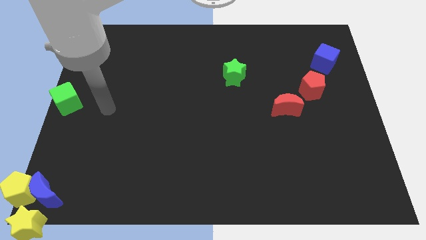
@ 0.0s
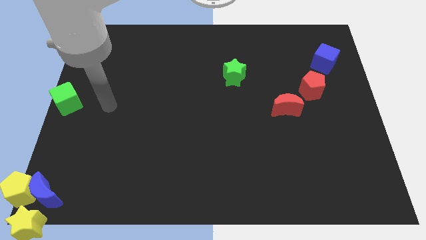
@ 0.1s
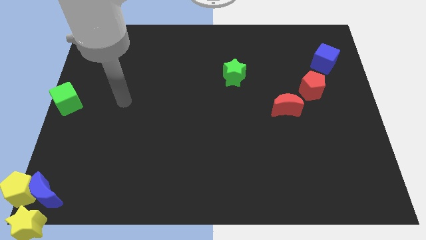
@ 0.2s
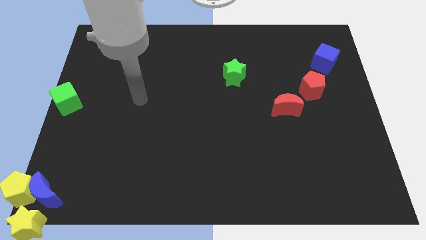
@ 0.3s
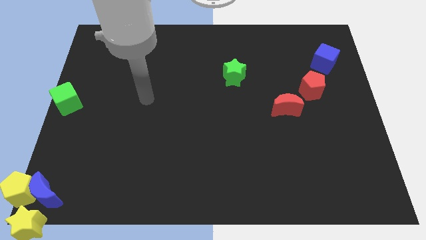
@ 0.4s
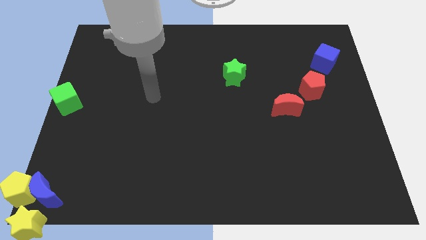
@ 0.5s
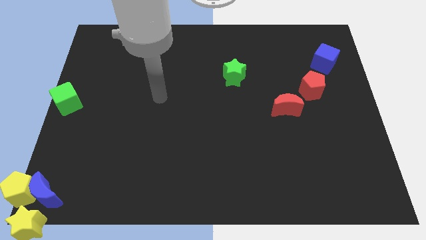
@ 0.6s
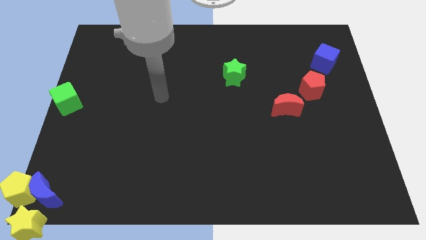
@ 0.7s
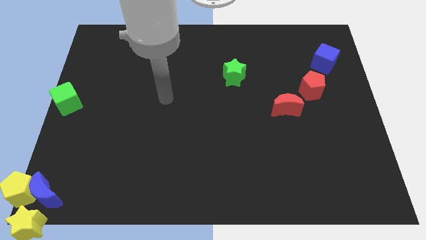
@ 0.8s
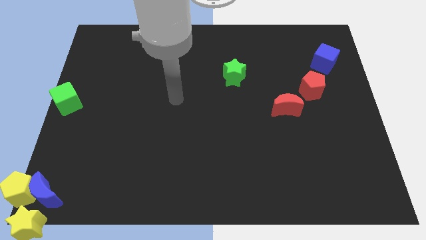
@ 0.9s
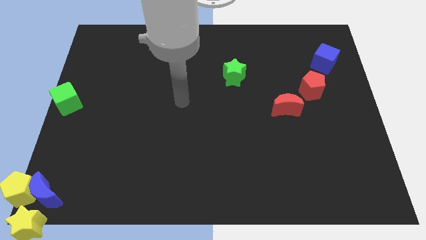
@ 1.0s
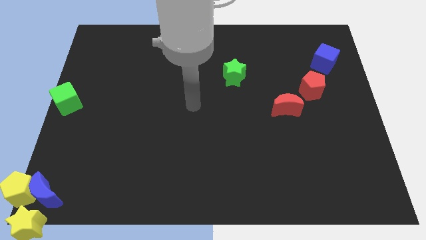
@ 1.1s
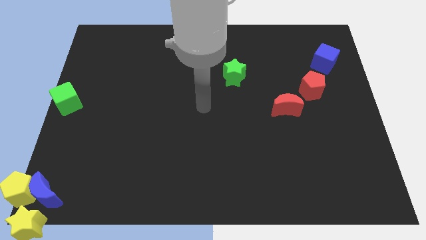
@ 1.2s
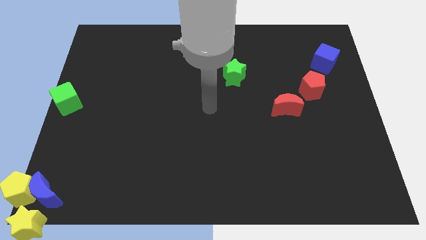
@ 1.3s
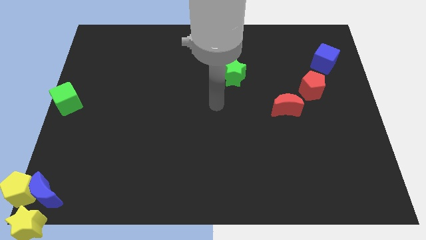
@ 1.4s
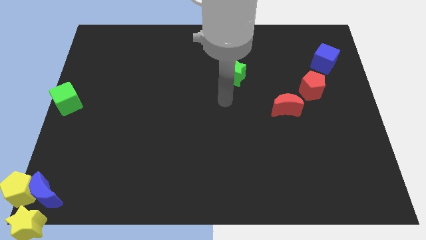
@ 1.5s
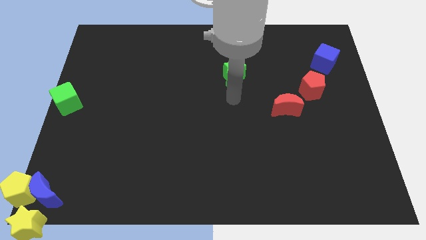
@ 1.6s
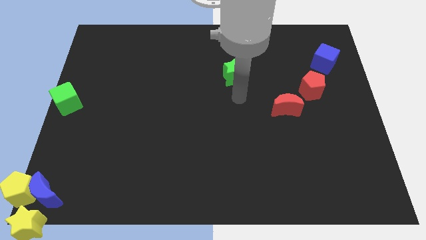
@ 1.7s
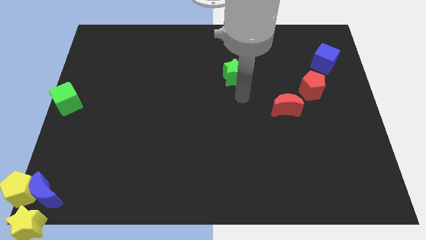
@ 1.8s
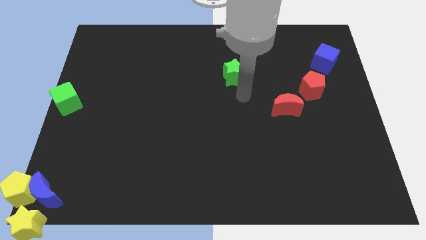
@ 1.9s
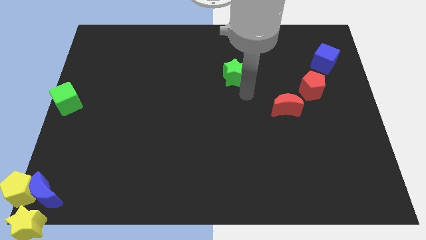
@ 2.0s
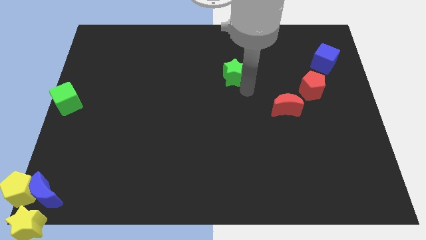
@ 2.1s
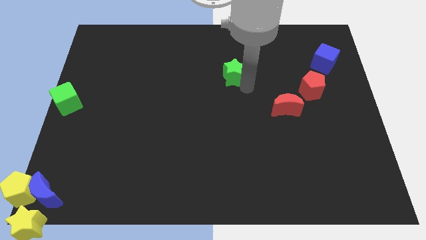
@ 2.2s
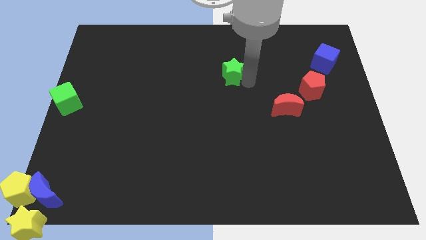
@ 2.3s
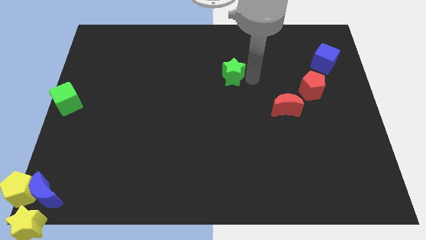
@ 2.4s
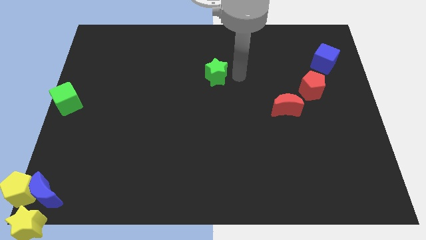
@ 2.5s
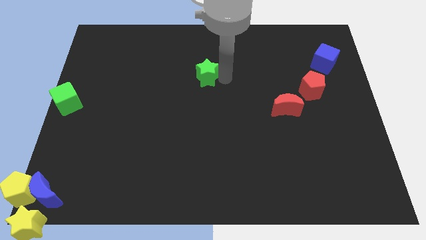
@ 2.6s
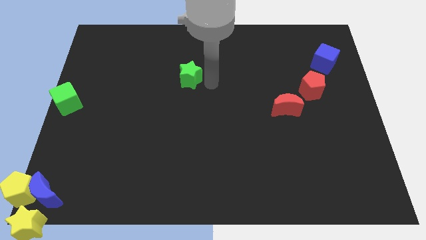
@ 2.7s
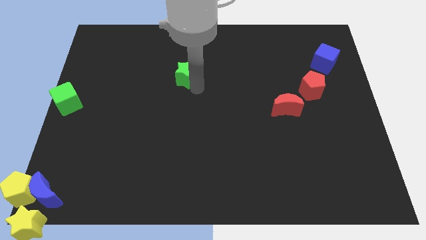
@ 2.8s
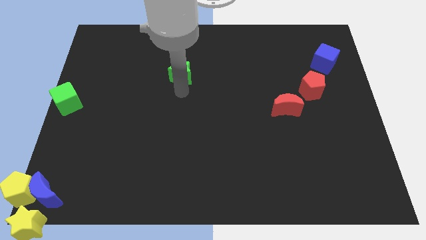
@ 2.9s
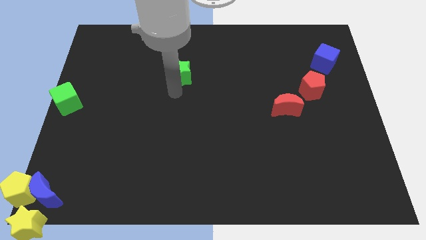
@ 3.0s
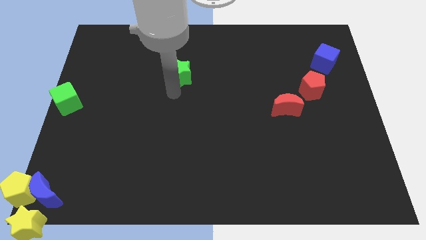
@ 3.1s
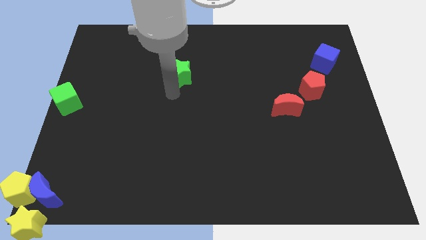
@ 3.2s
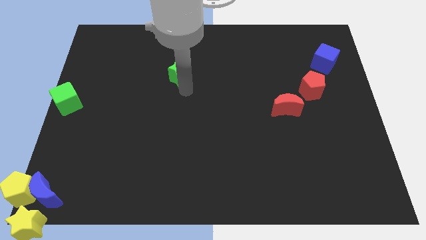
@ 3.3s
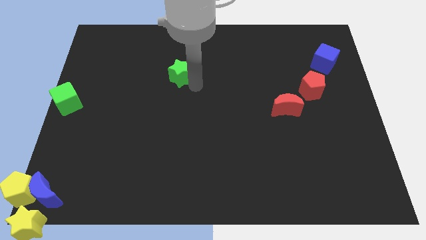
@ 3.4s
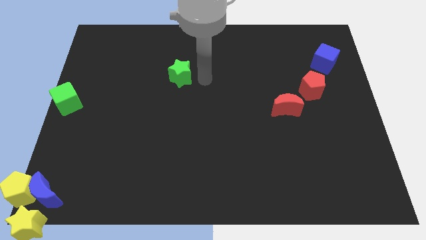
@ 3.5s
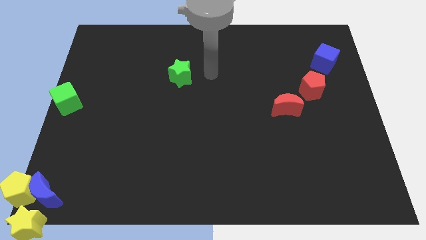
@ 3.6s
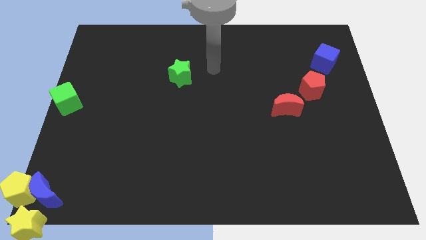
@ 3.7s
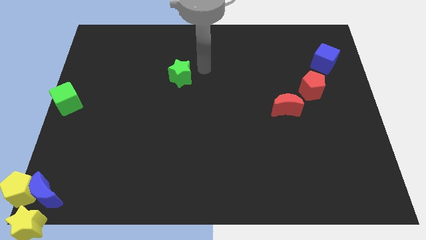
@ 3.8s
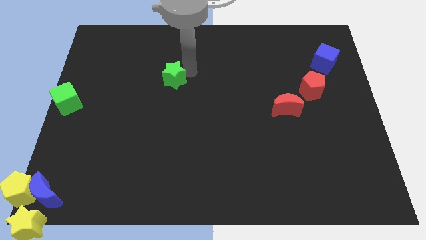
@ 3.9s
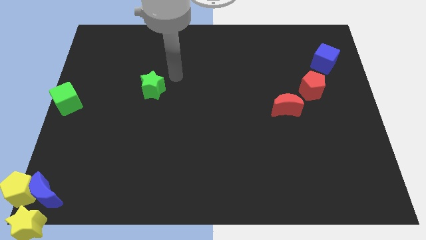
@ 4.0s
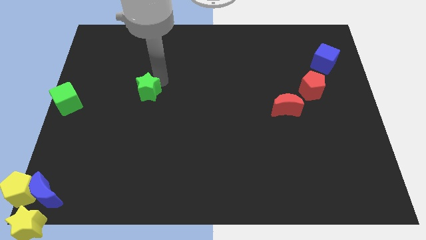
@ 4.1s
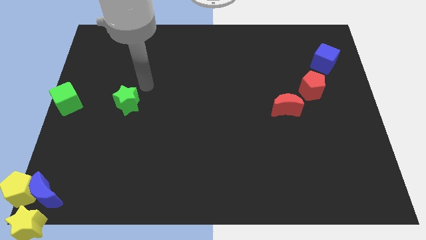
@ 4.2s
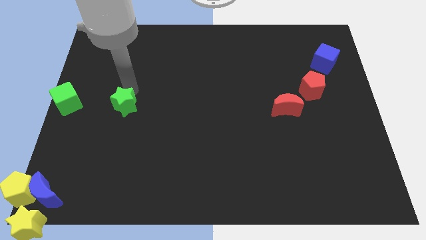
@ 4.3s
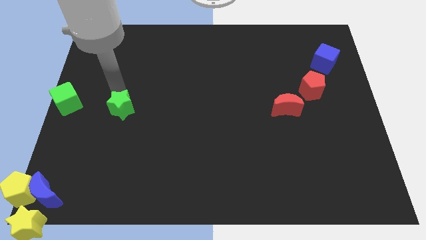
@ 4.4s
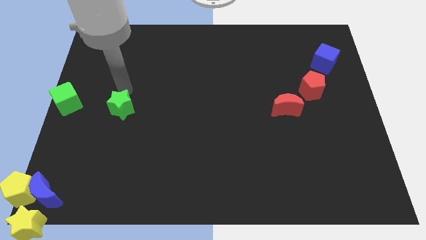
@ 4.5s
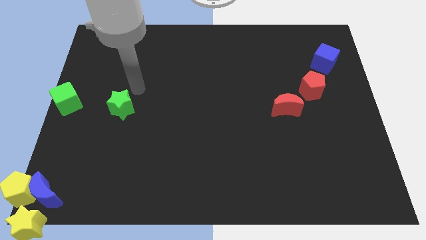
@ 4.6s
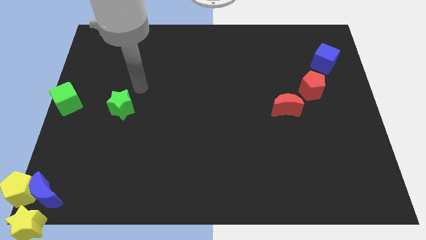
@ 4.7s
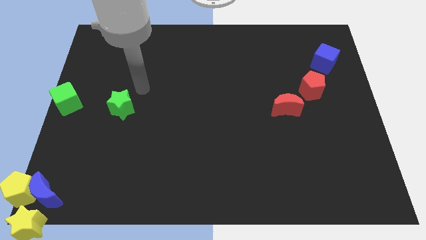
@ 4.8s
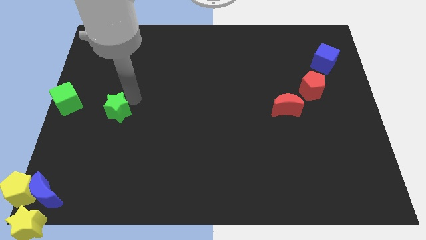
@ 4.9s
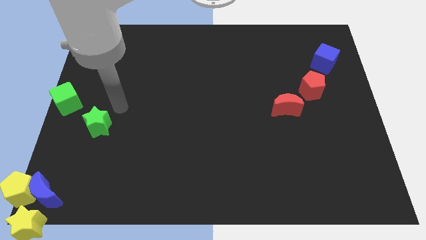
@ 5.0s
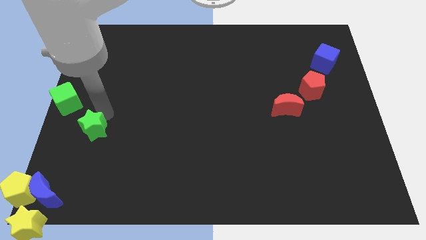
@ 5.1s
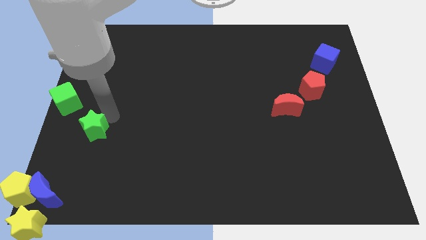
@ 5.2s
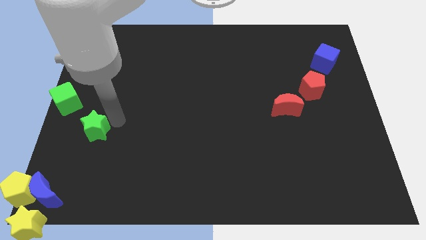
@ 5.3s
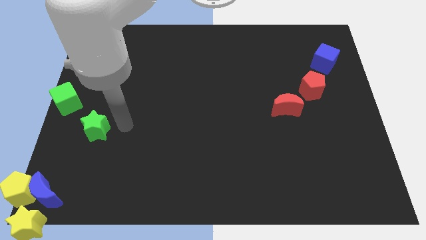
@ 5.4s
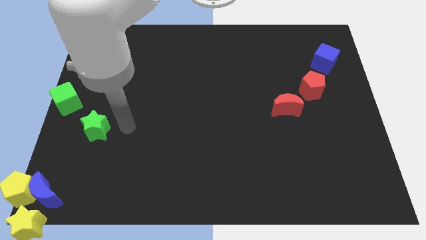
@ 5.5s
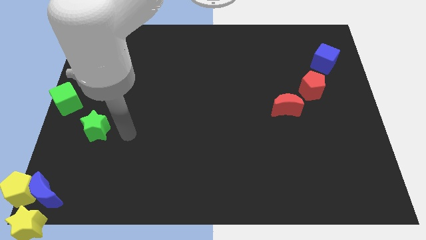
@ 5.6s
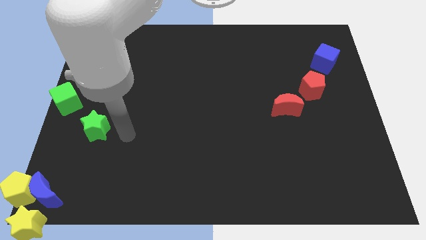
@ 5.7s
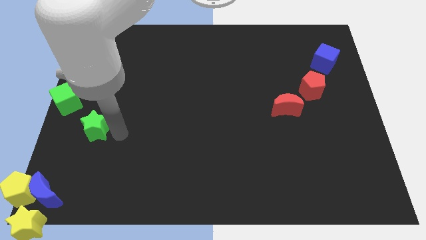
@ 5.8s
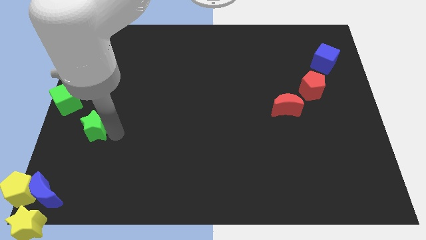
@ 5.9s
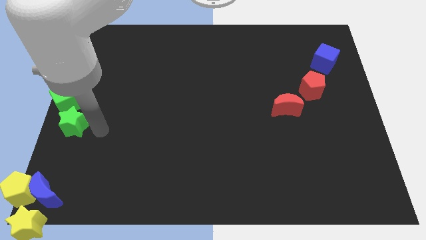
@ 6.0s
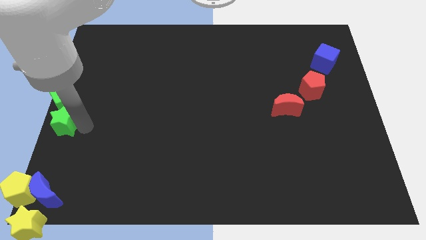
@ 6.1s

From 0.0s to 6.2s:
move green star towards center left corner of the board

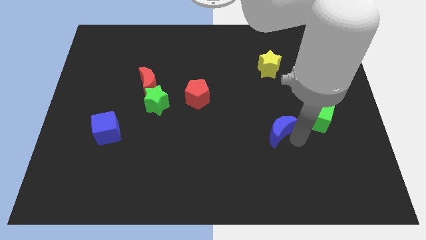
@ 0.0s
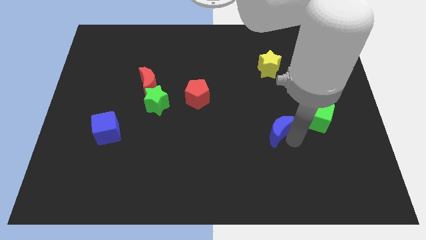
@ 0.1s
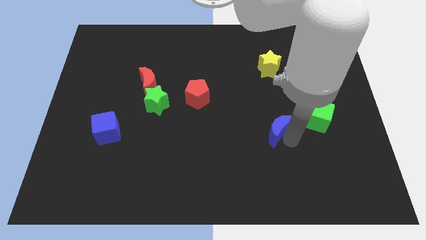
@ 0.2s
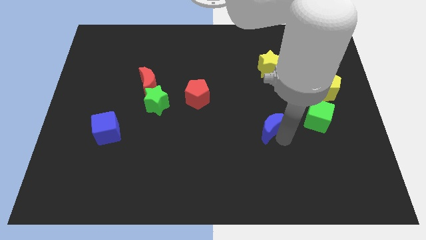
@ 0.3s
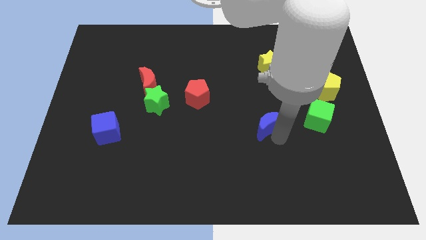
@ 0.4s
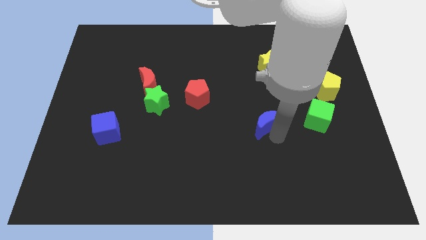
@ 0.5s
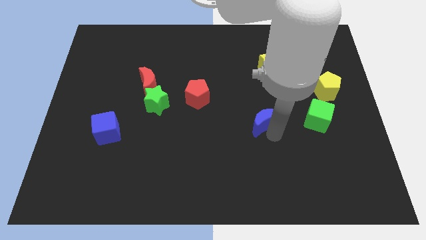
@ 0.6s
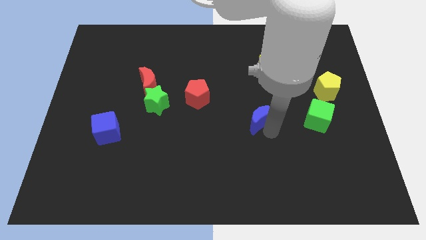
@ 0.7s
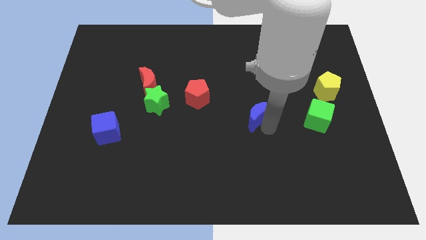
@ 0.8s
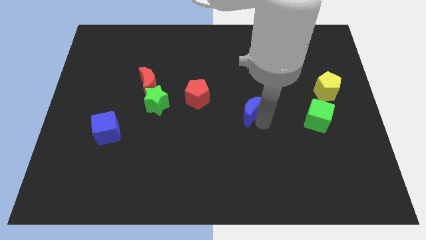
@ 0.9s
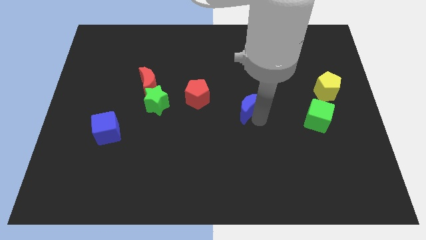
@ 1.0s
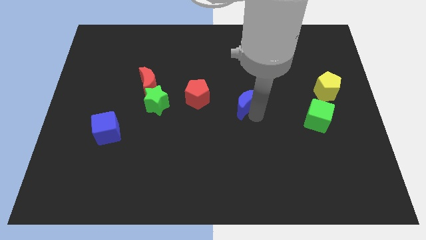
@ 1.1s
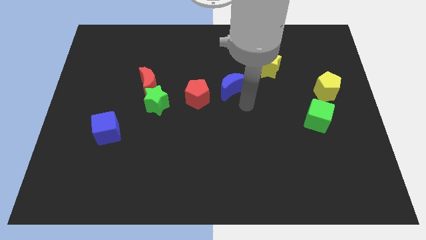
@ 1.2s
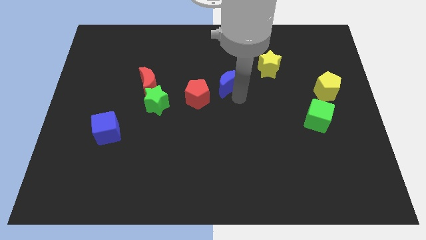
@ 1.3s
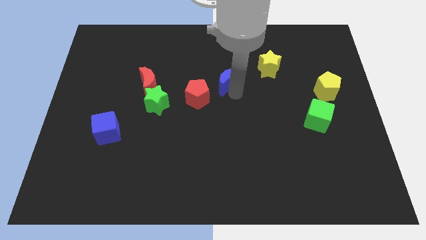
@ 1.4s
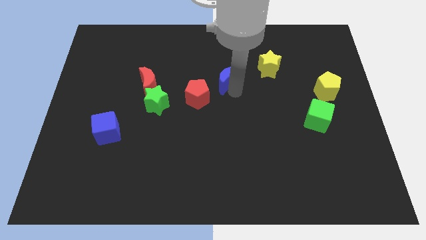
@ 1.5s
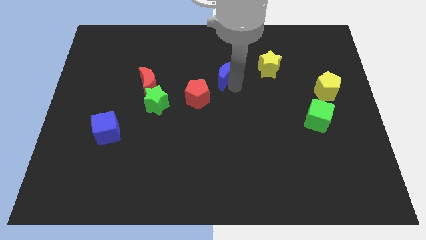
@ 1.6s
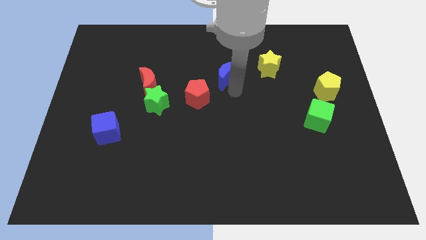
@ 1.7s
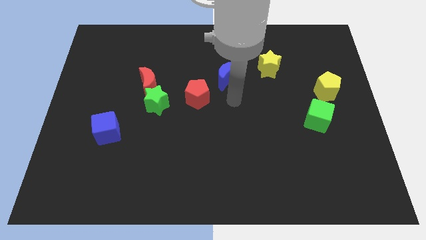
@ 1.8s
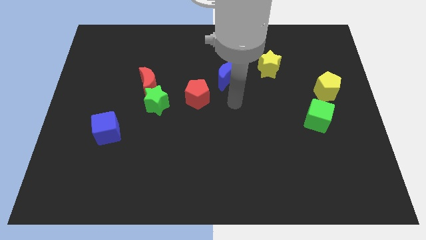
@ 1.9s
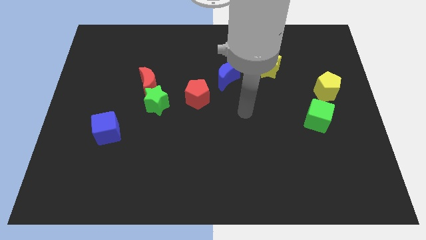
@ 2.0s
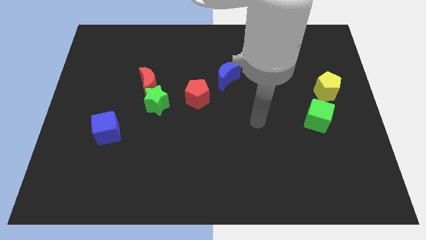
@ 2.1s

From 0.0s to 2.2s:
move the blue crescent diagonally to the top right of the red pentagon

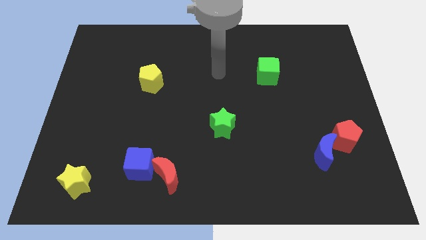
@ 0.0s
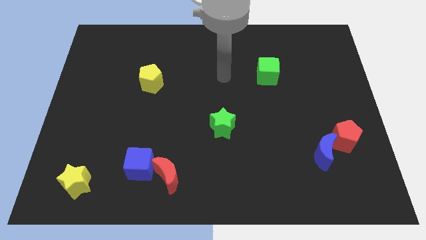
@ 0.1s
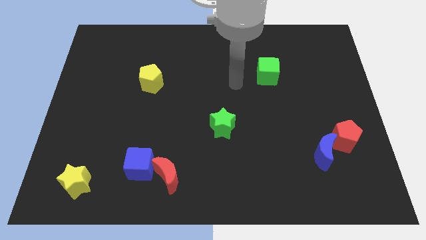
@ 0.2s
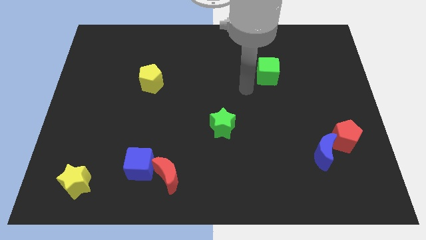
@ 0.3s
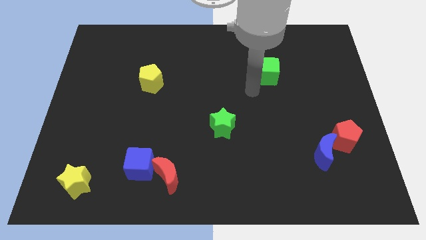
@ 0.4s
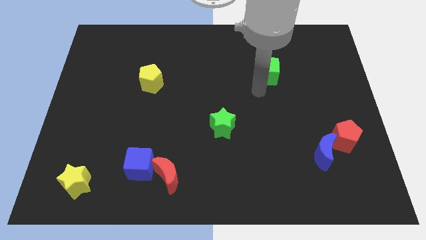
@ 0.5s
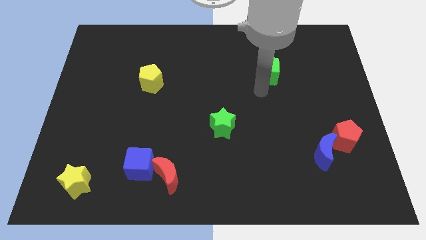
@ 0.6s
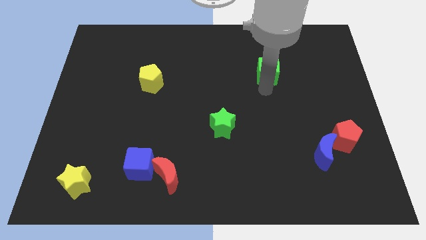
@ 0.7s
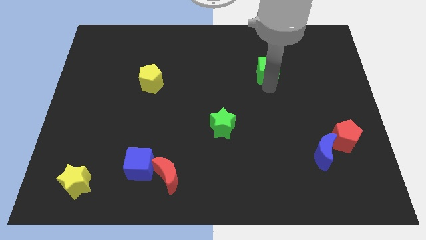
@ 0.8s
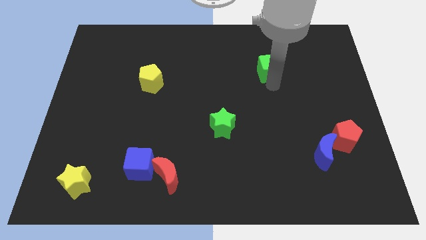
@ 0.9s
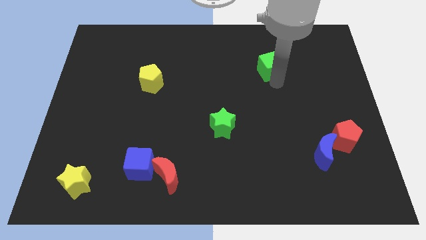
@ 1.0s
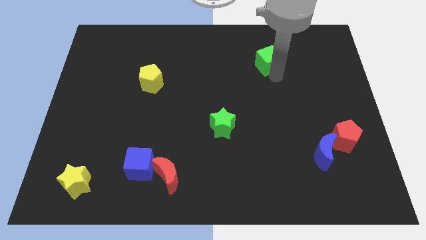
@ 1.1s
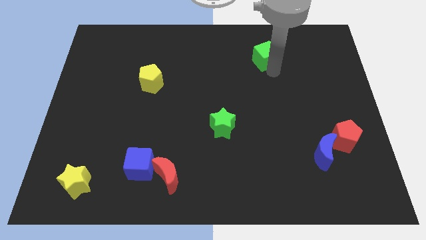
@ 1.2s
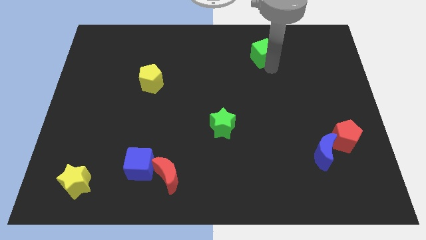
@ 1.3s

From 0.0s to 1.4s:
move your arm towards the green cube
